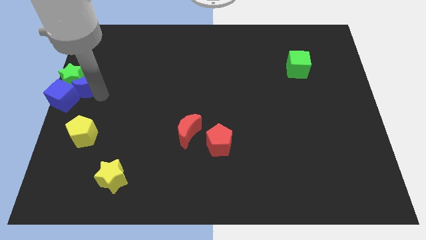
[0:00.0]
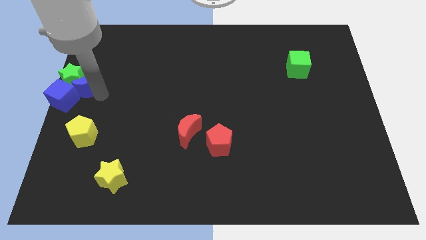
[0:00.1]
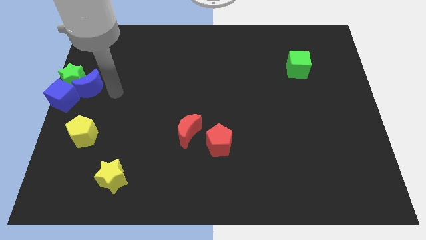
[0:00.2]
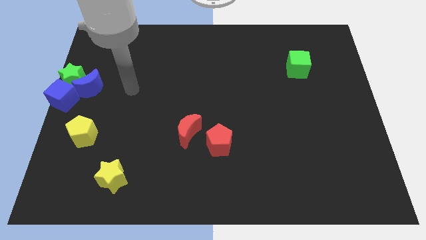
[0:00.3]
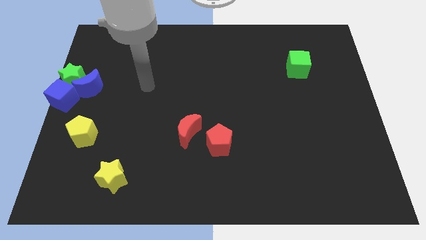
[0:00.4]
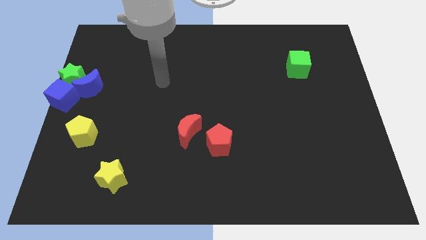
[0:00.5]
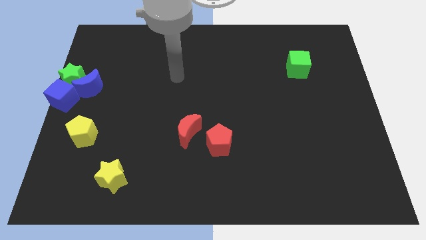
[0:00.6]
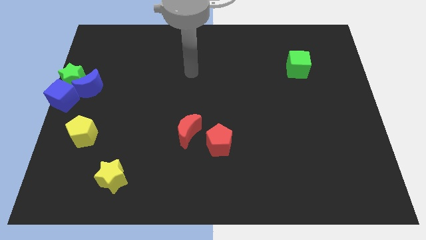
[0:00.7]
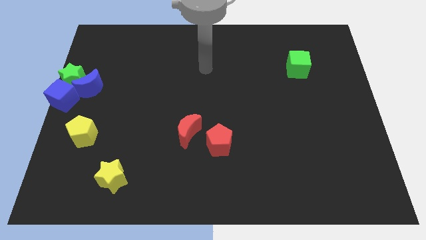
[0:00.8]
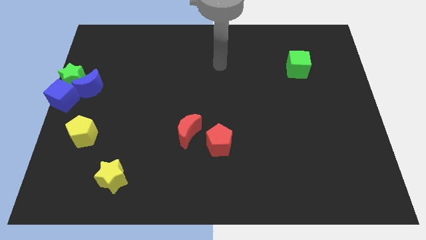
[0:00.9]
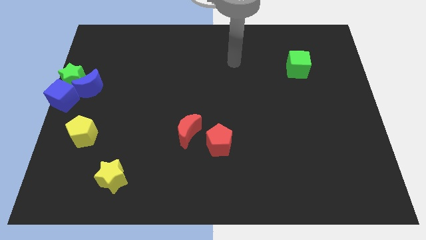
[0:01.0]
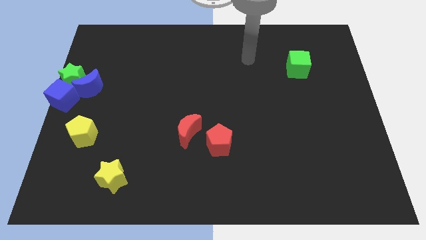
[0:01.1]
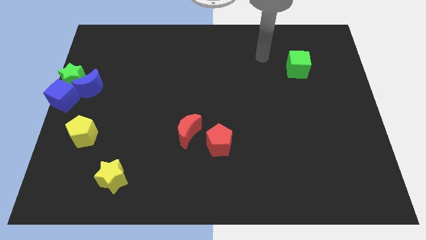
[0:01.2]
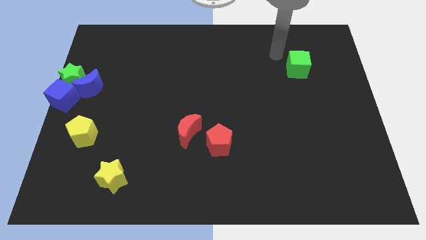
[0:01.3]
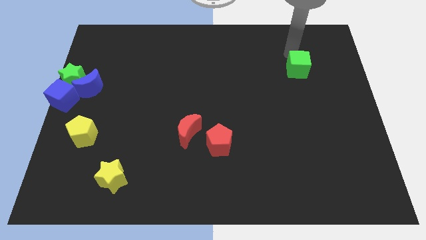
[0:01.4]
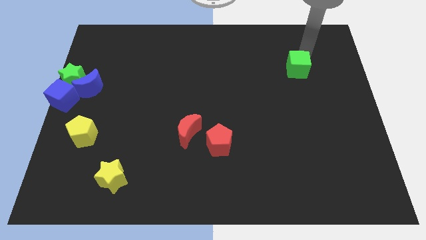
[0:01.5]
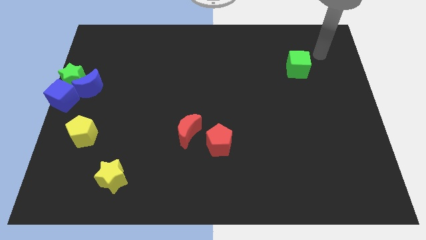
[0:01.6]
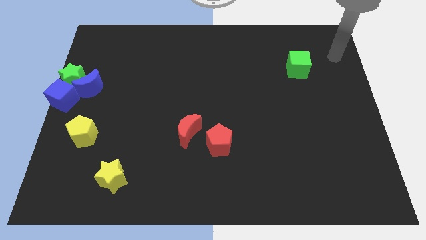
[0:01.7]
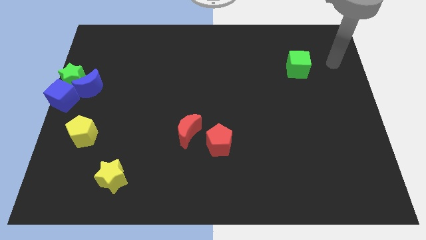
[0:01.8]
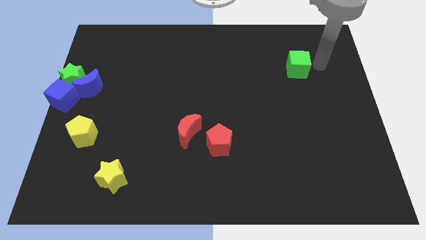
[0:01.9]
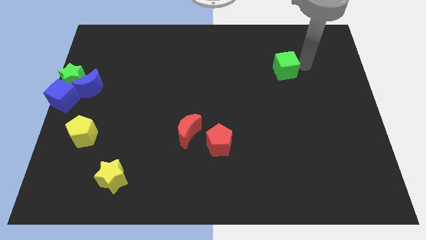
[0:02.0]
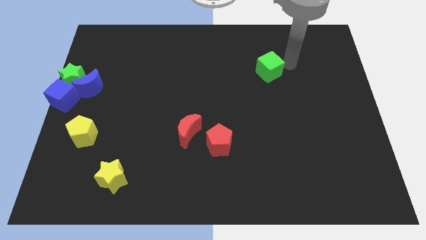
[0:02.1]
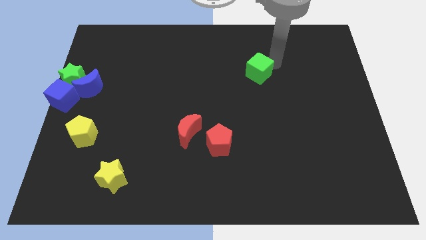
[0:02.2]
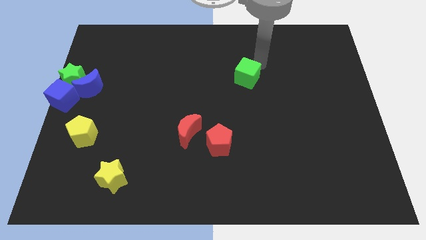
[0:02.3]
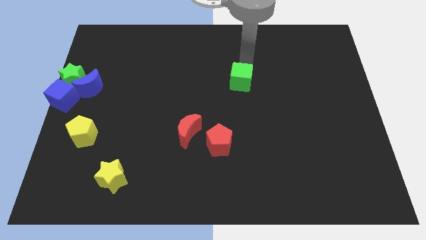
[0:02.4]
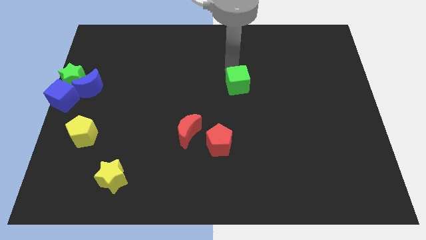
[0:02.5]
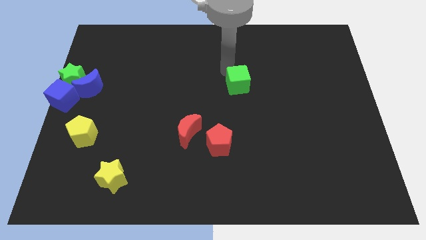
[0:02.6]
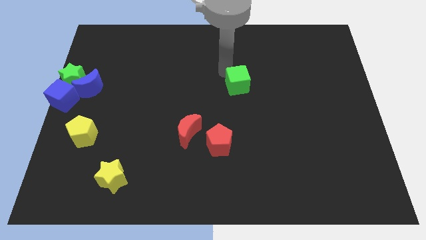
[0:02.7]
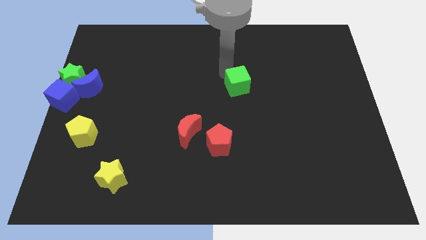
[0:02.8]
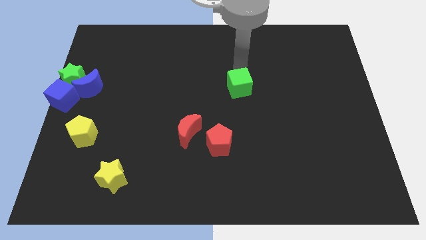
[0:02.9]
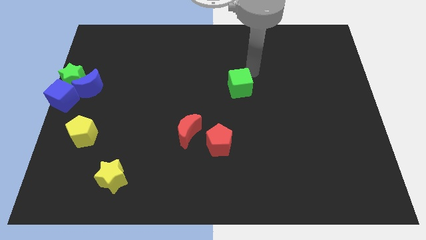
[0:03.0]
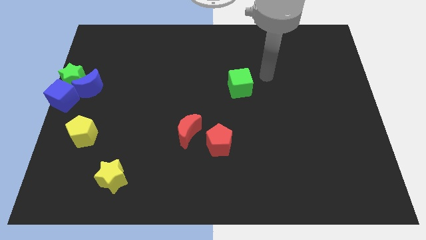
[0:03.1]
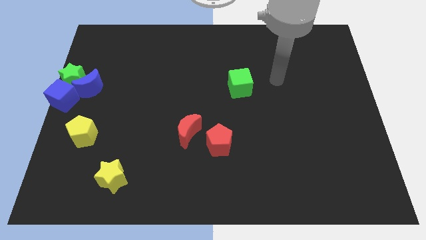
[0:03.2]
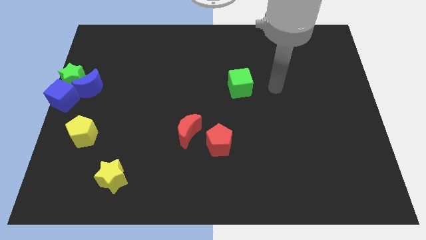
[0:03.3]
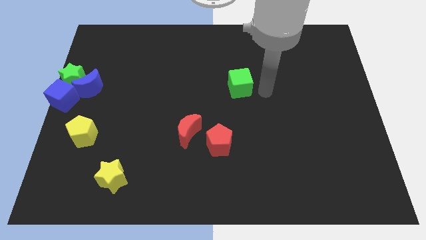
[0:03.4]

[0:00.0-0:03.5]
push the green cube to the center of the board

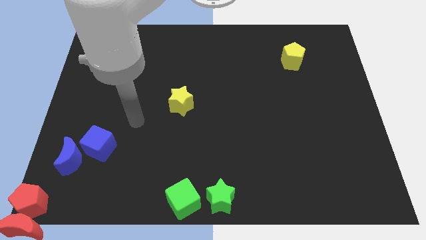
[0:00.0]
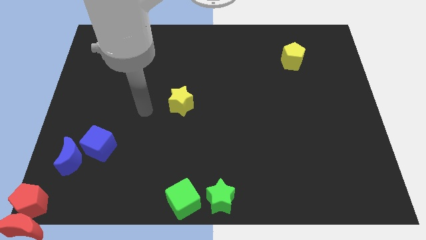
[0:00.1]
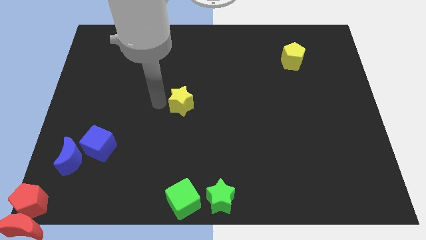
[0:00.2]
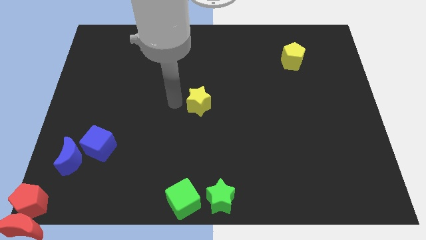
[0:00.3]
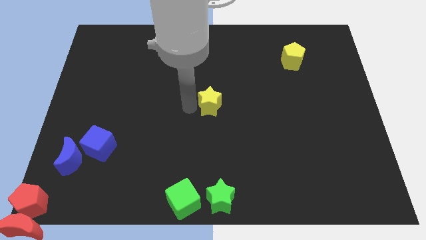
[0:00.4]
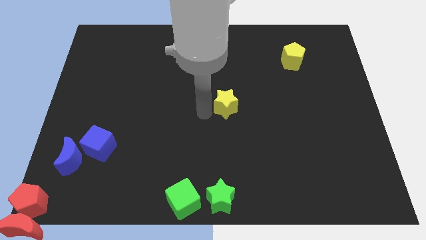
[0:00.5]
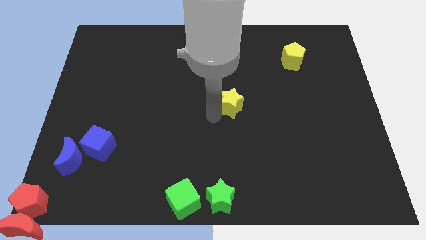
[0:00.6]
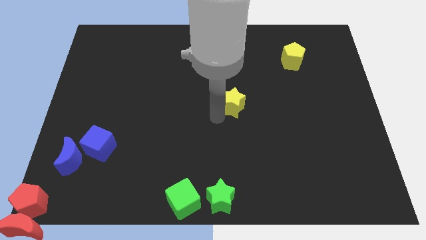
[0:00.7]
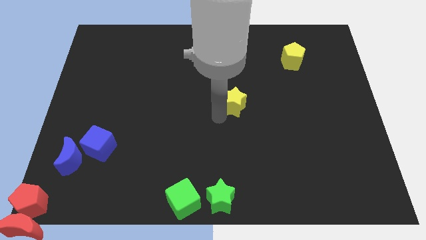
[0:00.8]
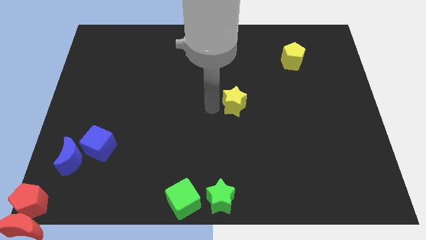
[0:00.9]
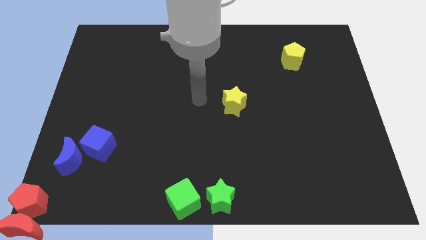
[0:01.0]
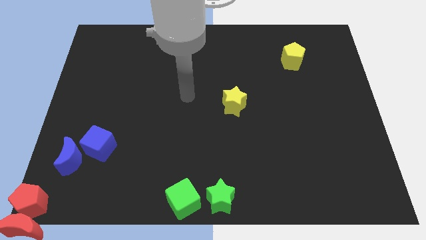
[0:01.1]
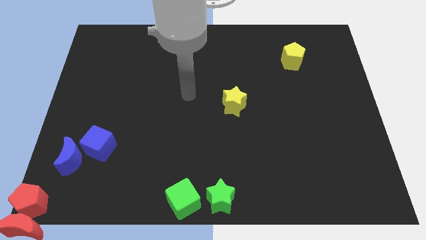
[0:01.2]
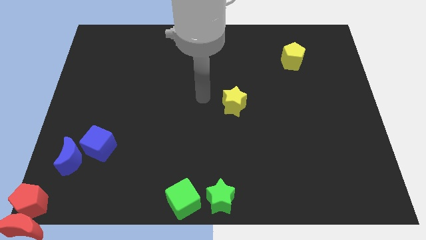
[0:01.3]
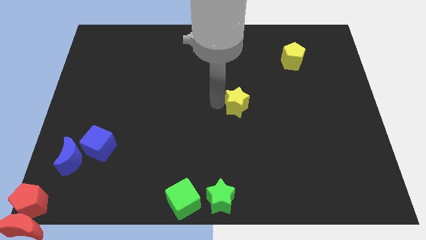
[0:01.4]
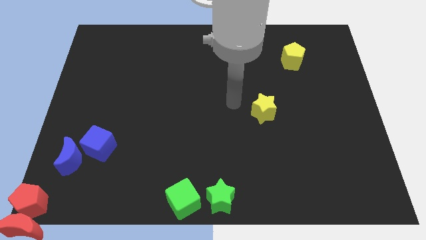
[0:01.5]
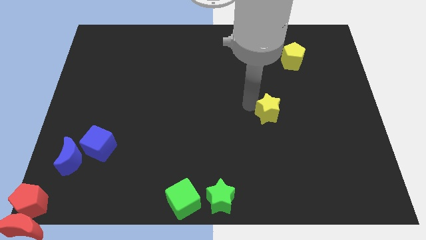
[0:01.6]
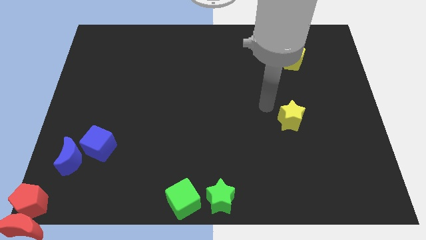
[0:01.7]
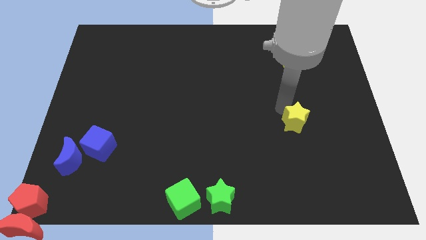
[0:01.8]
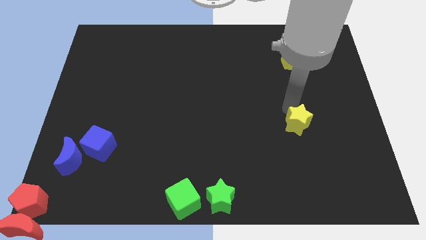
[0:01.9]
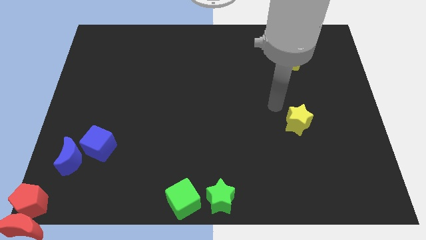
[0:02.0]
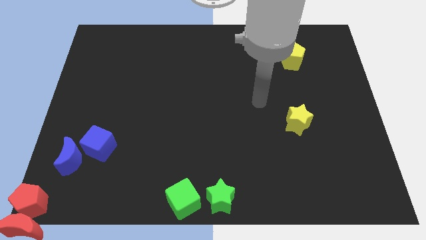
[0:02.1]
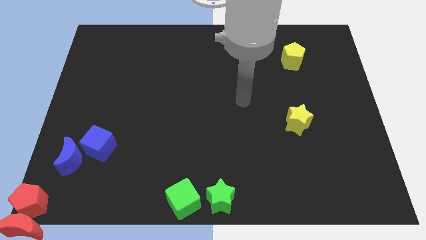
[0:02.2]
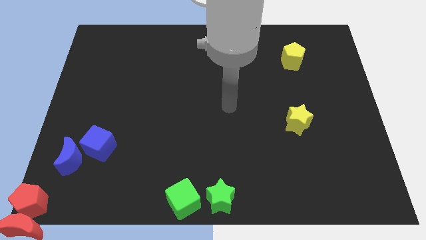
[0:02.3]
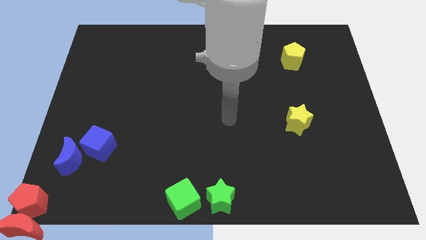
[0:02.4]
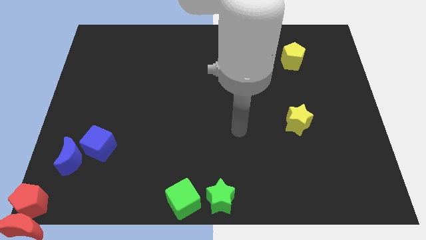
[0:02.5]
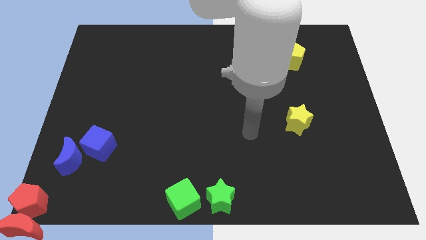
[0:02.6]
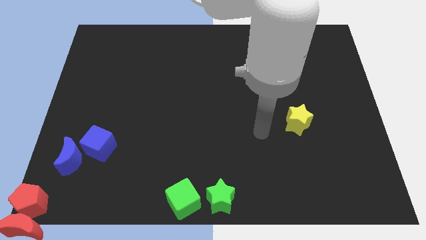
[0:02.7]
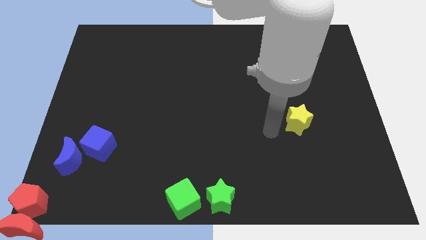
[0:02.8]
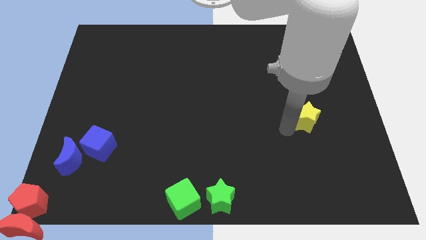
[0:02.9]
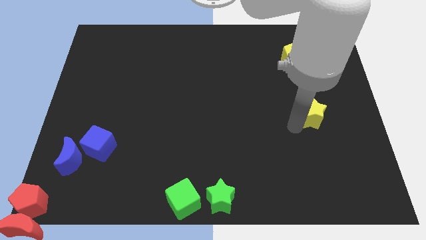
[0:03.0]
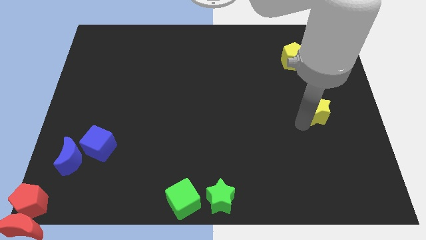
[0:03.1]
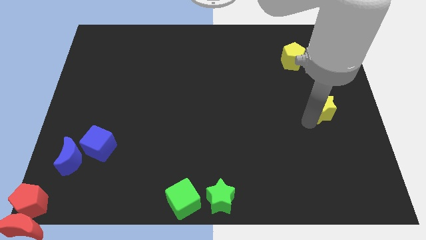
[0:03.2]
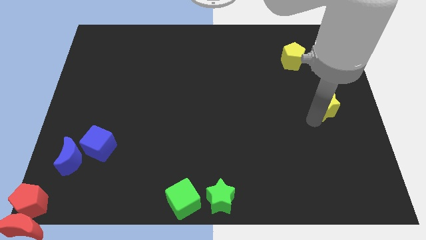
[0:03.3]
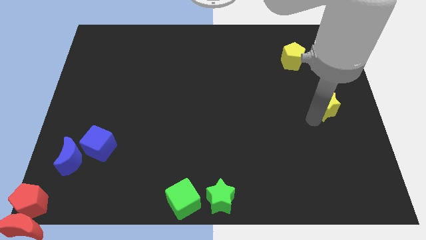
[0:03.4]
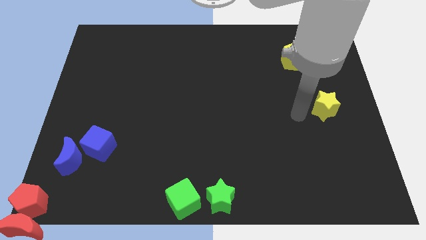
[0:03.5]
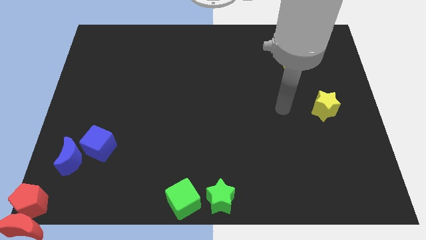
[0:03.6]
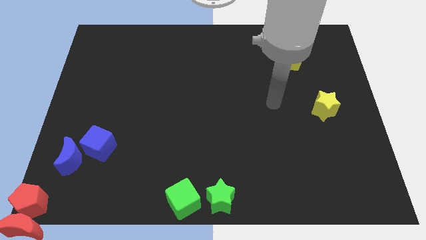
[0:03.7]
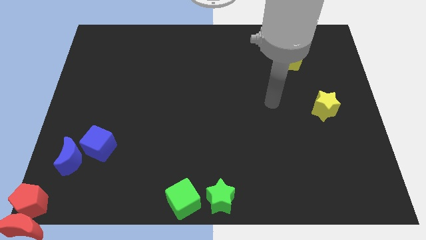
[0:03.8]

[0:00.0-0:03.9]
place the yellow star diagonally to green star

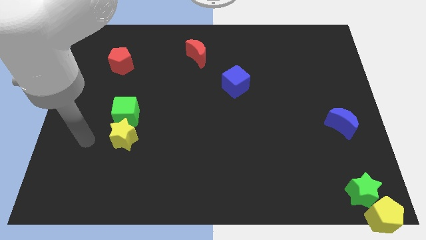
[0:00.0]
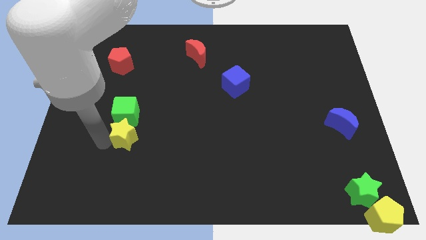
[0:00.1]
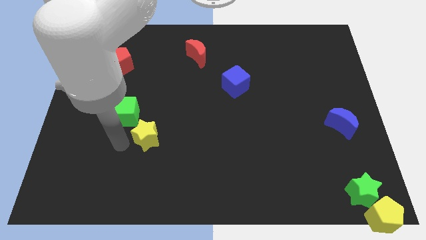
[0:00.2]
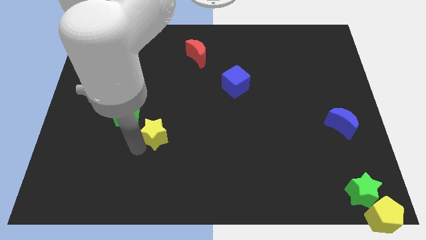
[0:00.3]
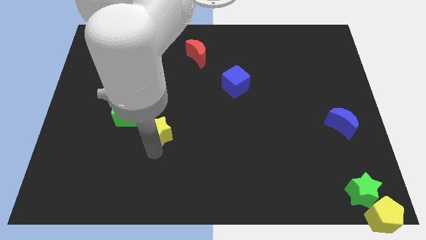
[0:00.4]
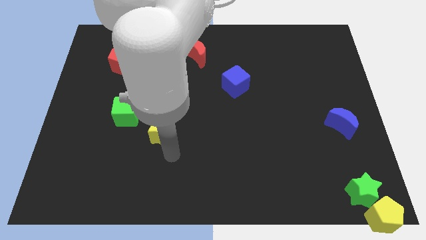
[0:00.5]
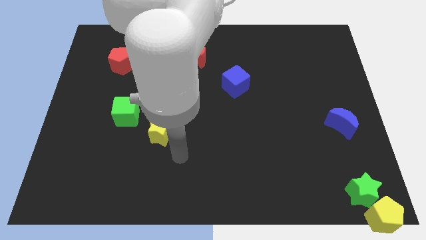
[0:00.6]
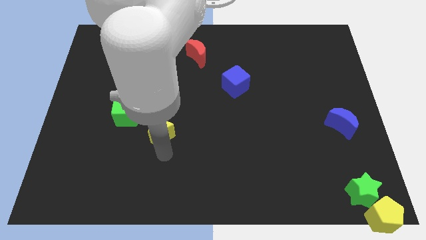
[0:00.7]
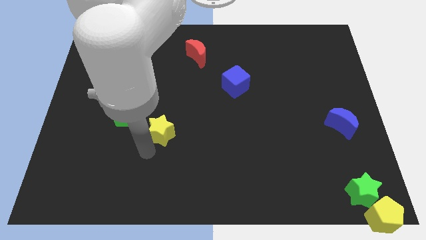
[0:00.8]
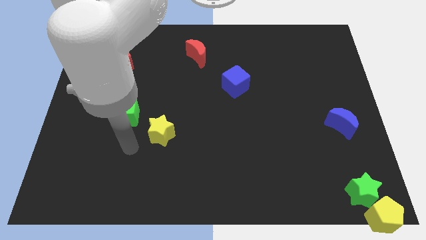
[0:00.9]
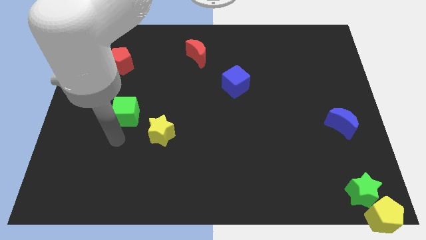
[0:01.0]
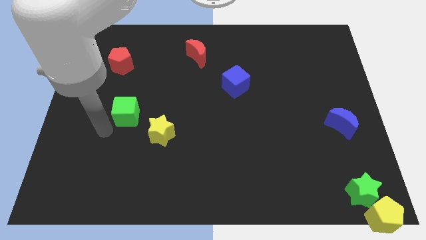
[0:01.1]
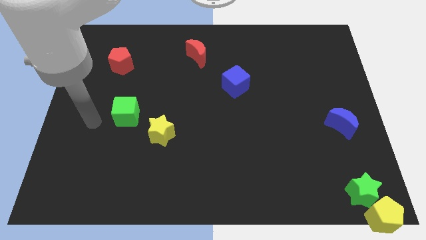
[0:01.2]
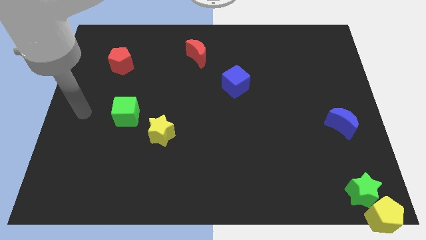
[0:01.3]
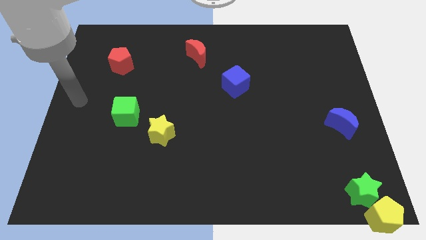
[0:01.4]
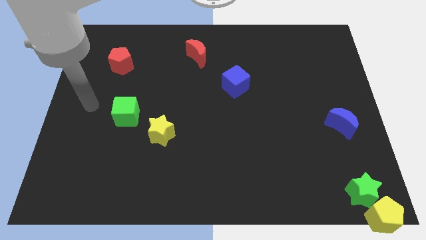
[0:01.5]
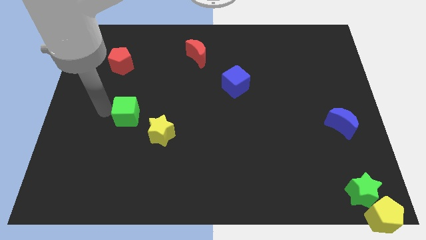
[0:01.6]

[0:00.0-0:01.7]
move yellow star away from the green cube
